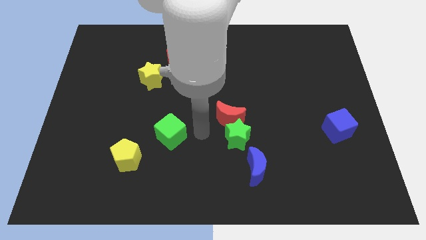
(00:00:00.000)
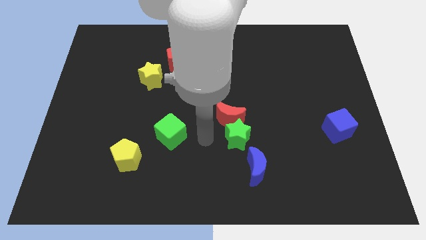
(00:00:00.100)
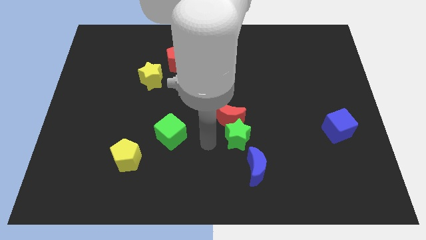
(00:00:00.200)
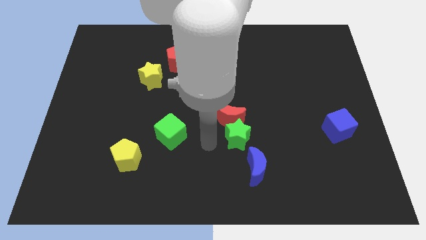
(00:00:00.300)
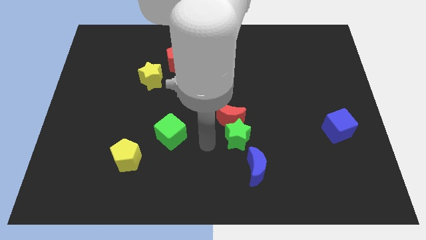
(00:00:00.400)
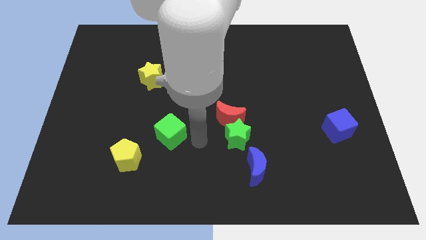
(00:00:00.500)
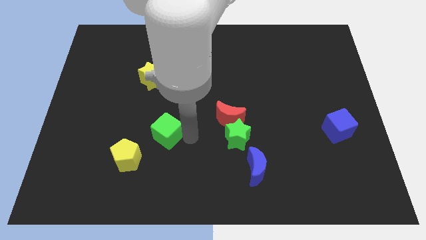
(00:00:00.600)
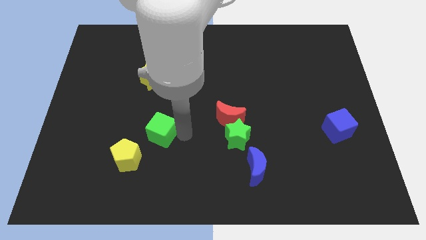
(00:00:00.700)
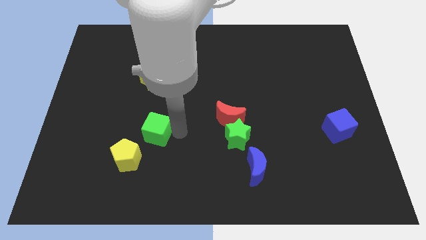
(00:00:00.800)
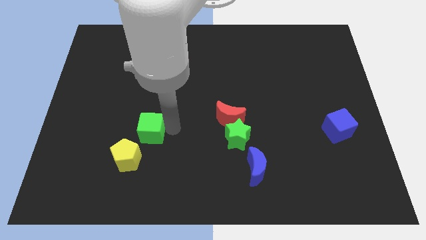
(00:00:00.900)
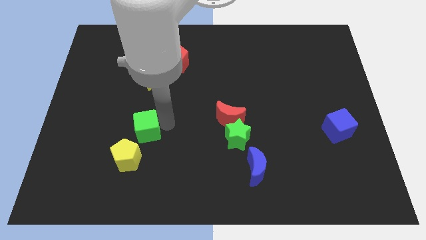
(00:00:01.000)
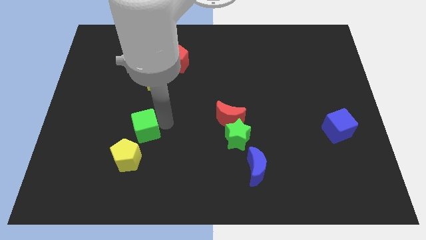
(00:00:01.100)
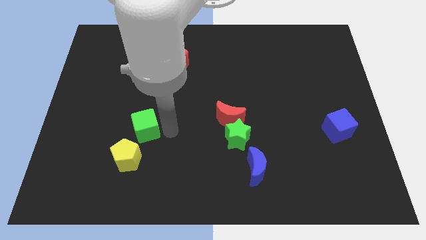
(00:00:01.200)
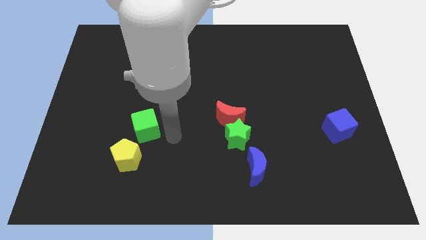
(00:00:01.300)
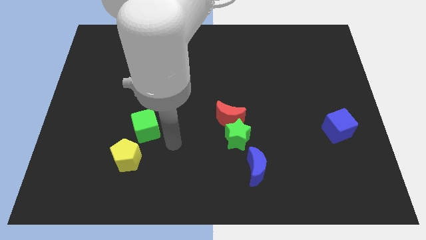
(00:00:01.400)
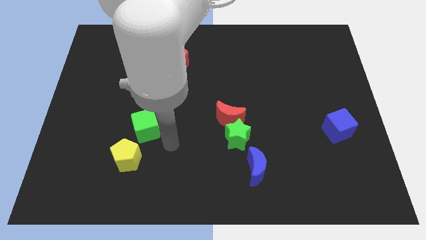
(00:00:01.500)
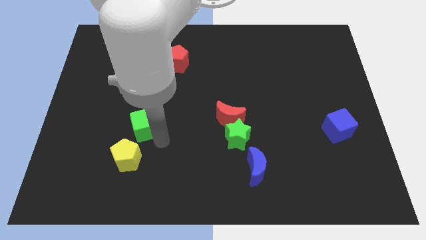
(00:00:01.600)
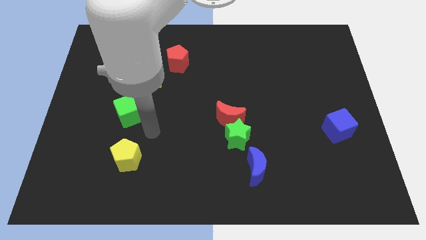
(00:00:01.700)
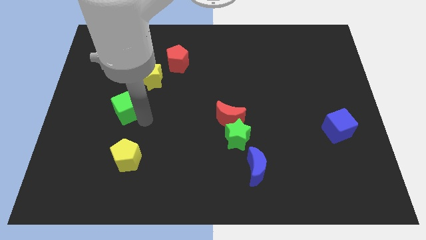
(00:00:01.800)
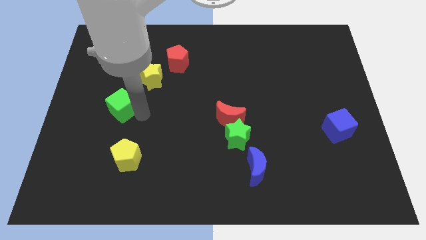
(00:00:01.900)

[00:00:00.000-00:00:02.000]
move the green cube to the top of the yellow pentagon

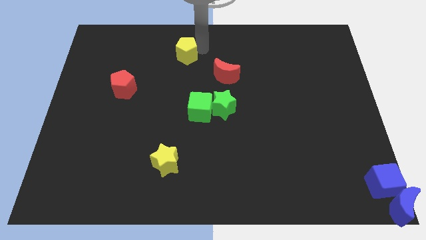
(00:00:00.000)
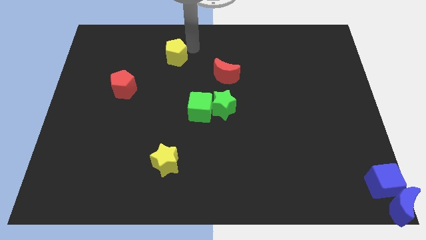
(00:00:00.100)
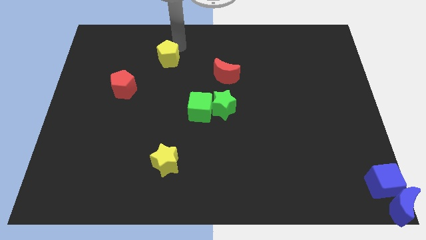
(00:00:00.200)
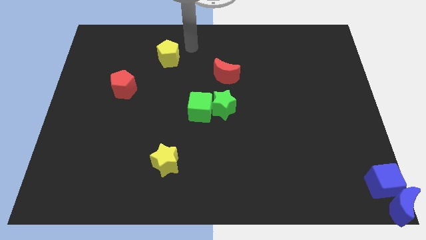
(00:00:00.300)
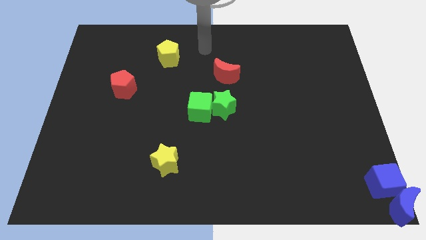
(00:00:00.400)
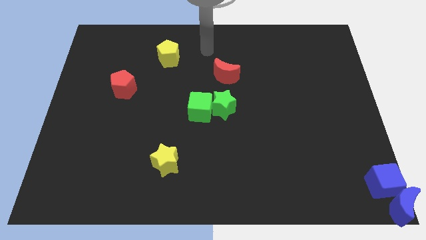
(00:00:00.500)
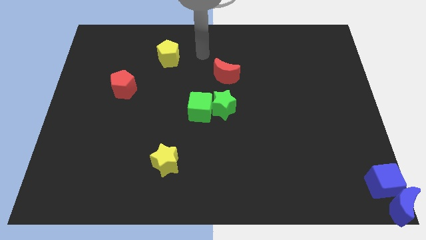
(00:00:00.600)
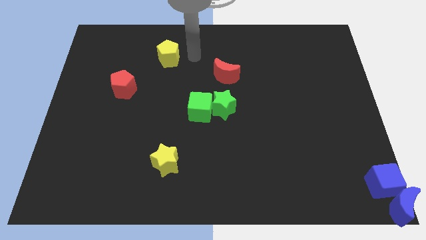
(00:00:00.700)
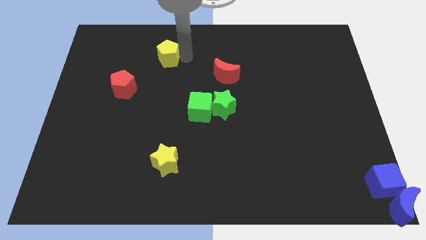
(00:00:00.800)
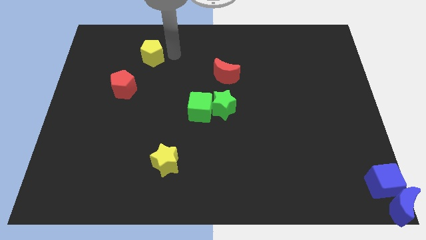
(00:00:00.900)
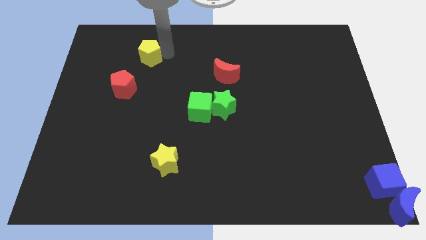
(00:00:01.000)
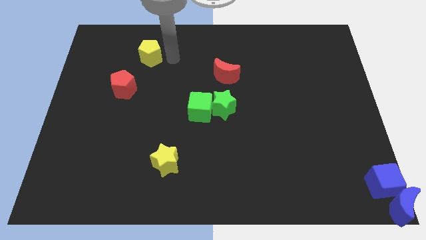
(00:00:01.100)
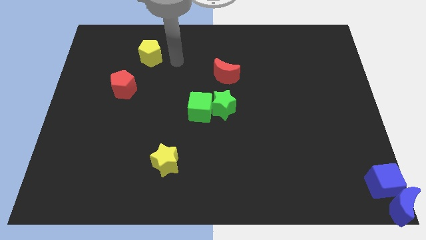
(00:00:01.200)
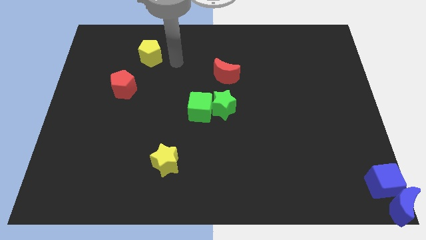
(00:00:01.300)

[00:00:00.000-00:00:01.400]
move the yellow pentagon above the red pentagon

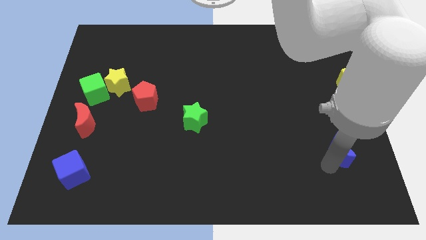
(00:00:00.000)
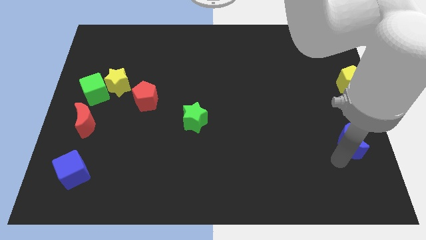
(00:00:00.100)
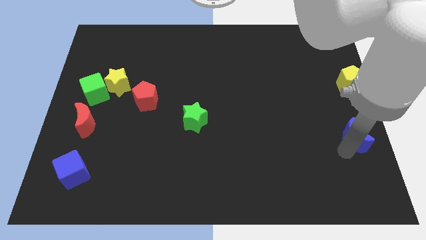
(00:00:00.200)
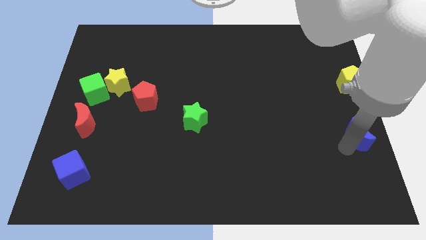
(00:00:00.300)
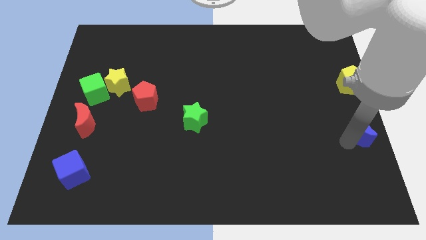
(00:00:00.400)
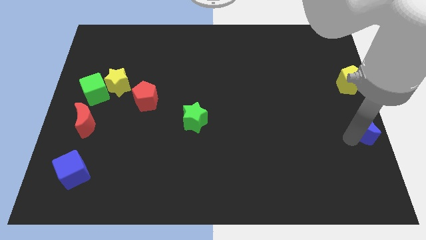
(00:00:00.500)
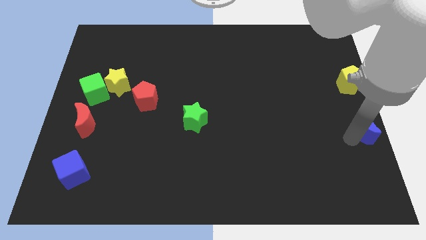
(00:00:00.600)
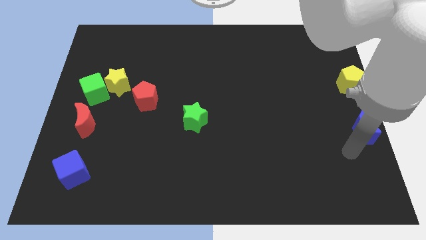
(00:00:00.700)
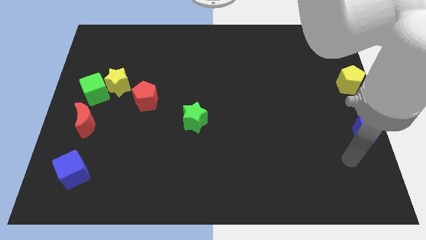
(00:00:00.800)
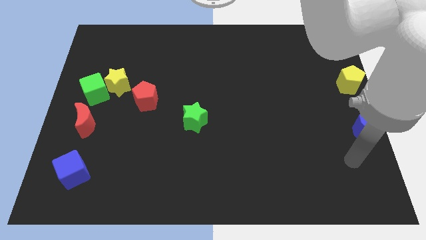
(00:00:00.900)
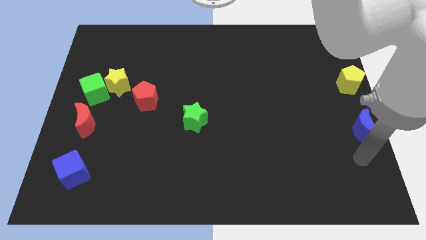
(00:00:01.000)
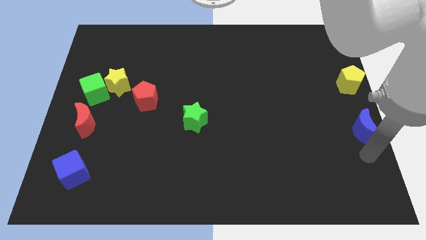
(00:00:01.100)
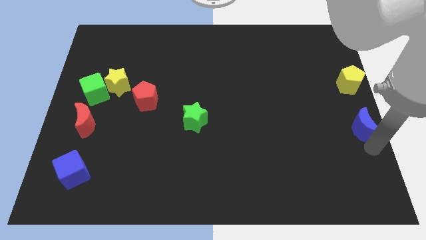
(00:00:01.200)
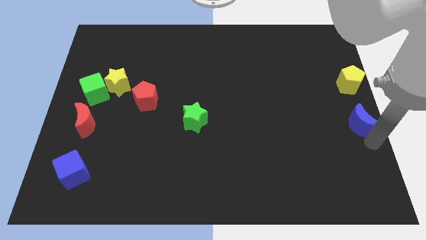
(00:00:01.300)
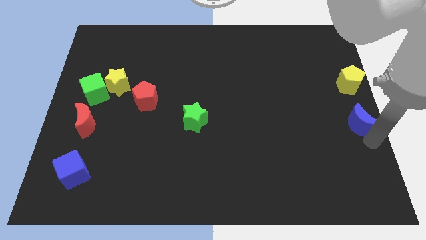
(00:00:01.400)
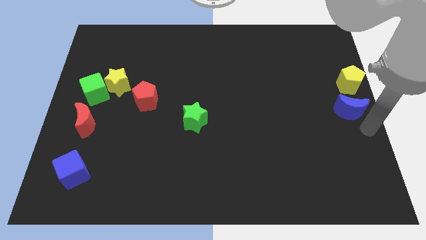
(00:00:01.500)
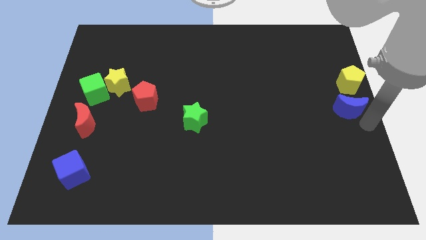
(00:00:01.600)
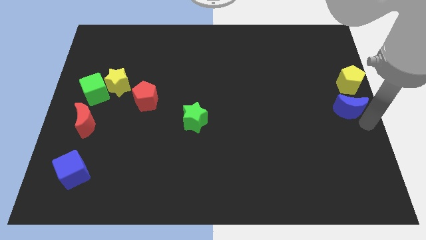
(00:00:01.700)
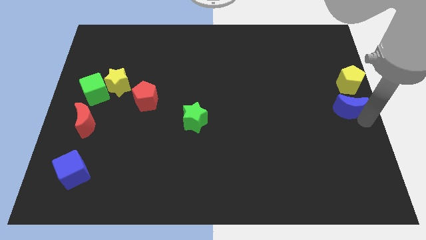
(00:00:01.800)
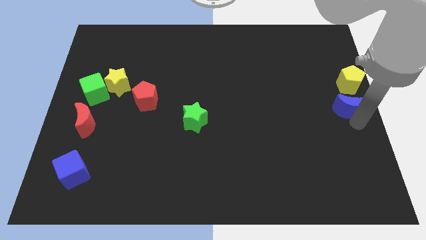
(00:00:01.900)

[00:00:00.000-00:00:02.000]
put the blue moon vertically below the yellow pentagon

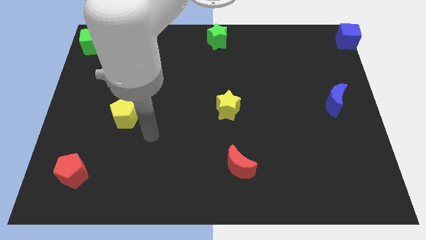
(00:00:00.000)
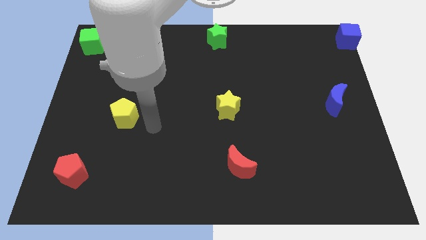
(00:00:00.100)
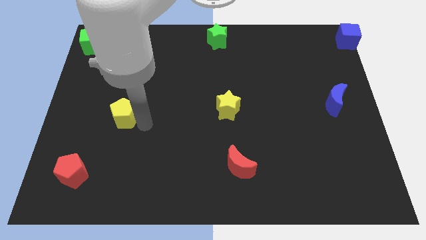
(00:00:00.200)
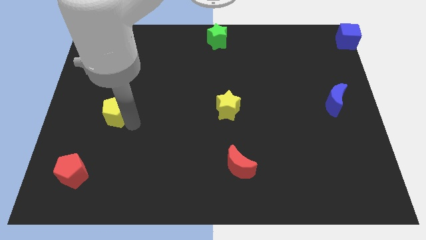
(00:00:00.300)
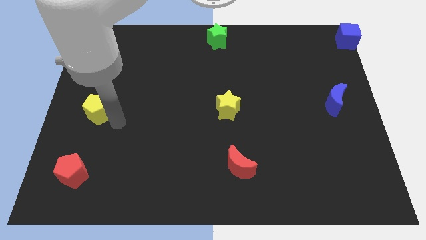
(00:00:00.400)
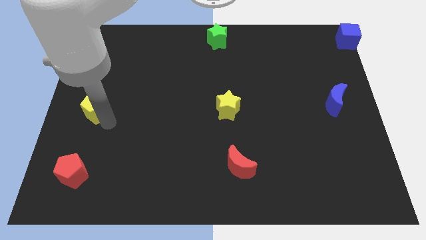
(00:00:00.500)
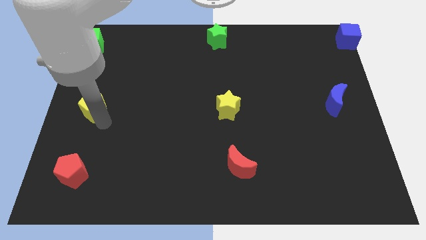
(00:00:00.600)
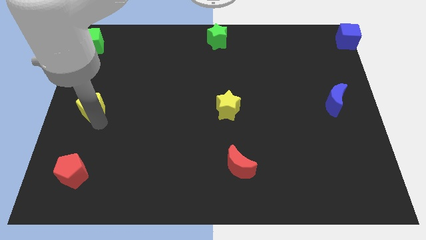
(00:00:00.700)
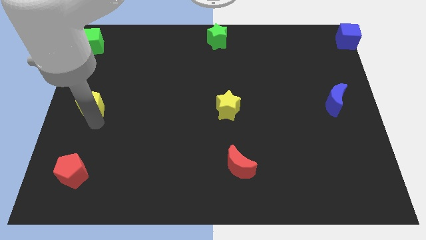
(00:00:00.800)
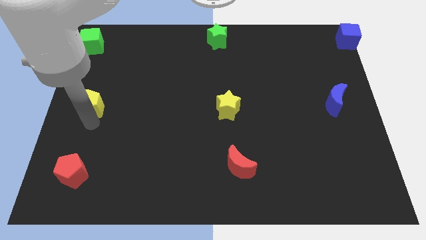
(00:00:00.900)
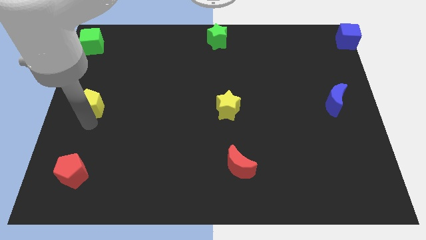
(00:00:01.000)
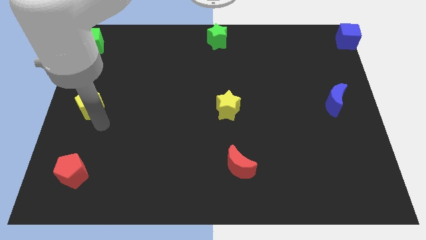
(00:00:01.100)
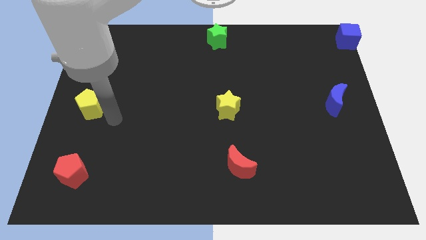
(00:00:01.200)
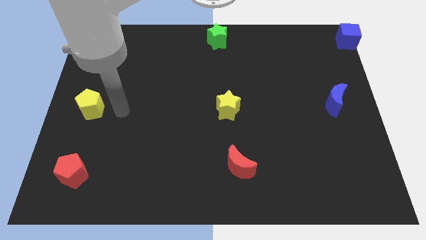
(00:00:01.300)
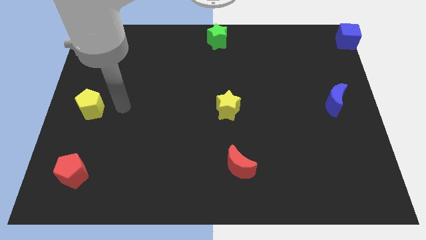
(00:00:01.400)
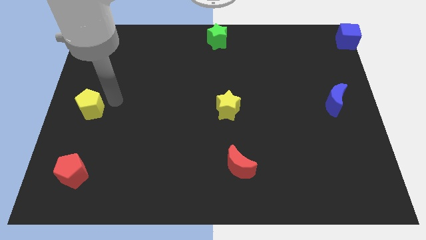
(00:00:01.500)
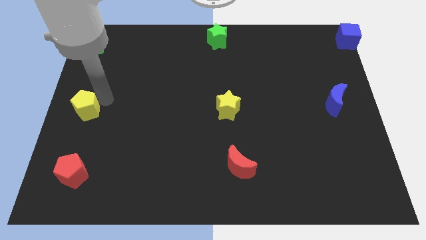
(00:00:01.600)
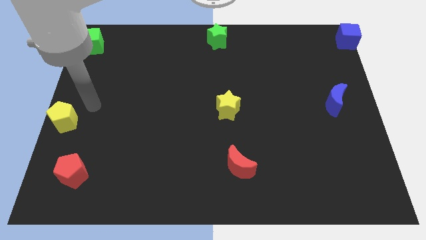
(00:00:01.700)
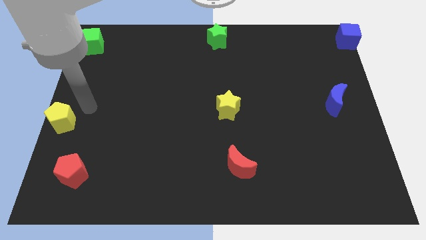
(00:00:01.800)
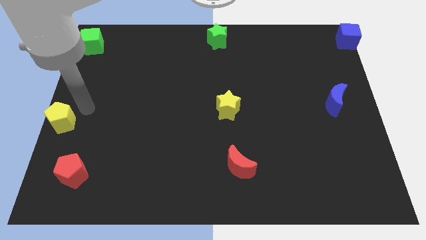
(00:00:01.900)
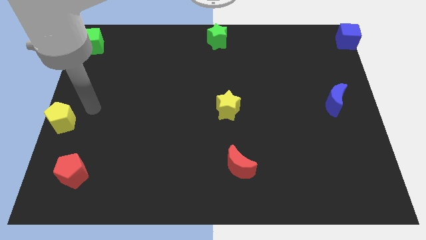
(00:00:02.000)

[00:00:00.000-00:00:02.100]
place yellow pentagon at the center left

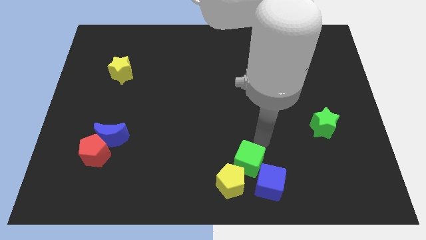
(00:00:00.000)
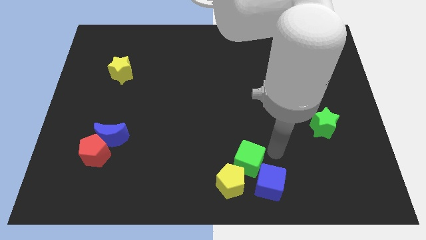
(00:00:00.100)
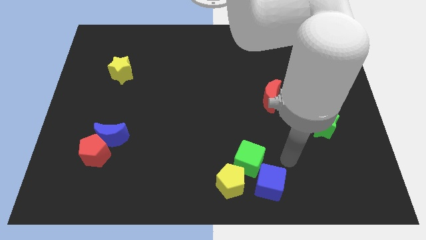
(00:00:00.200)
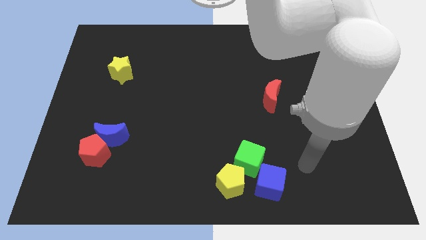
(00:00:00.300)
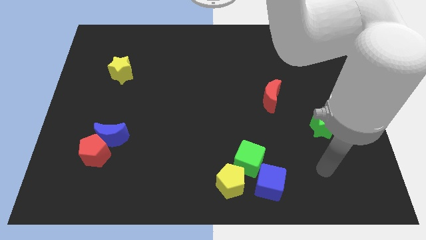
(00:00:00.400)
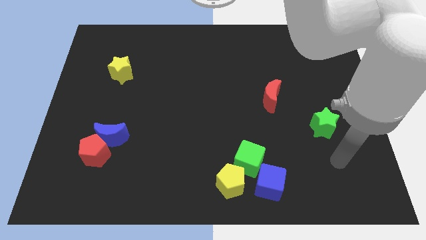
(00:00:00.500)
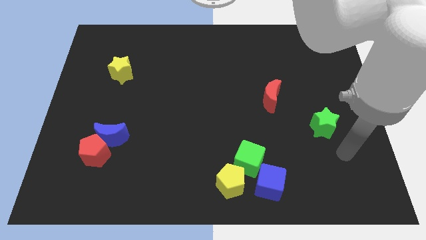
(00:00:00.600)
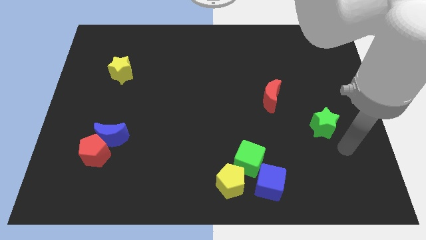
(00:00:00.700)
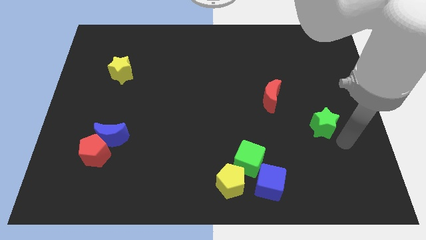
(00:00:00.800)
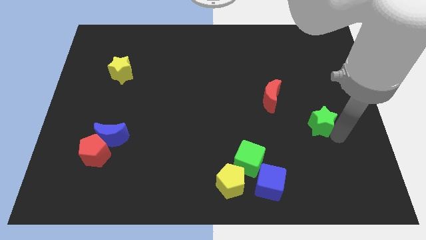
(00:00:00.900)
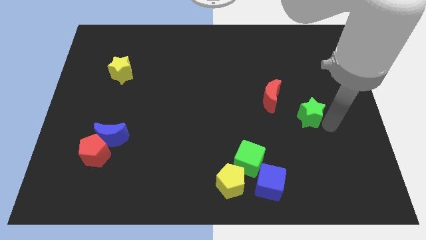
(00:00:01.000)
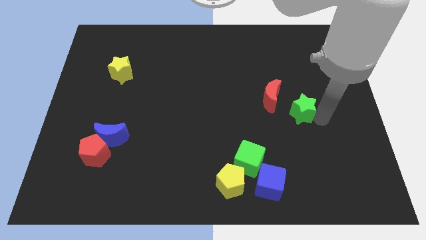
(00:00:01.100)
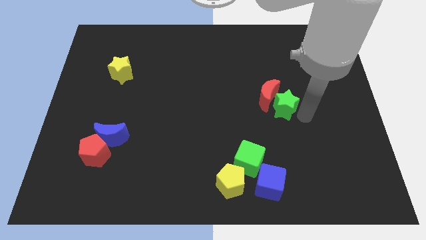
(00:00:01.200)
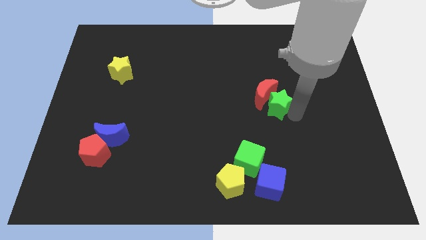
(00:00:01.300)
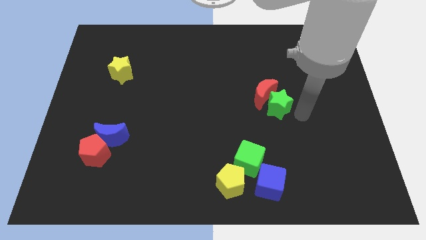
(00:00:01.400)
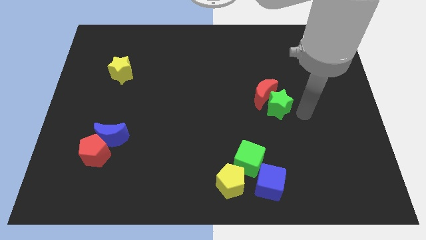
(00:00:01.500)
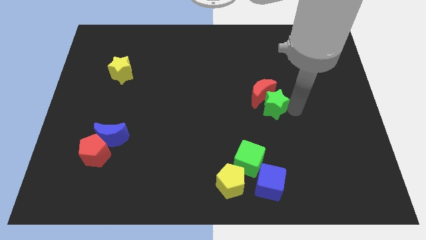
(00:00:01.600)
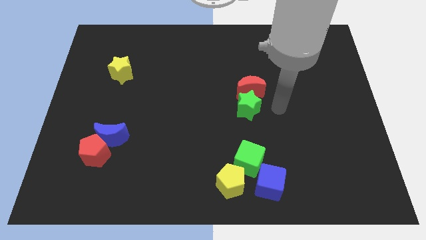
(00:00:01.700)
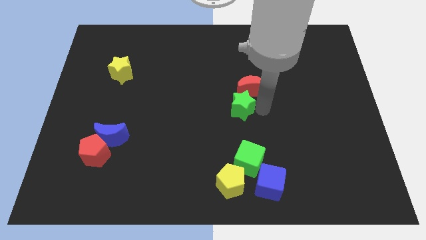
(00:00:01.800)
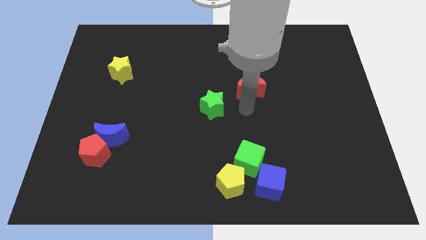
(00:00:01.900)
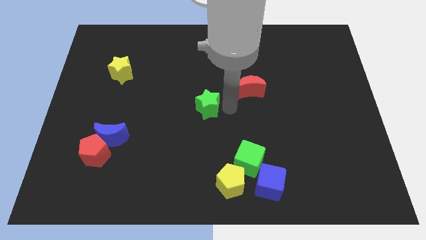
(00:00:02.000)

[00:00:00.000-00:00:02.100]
push the green star to the center
